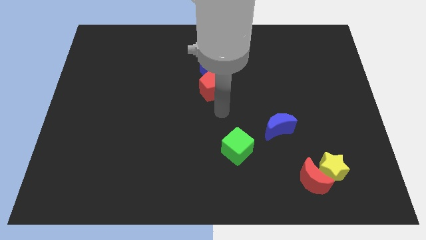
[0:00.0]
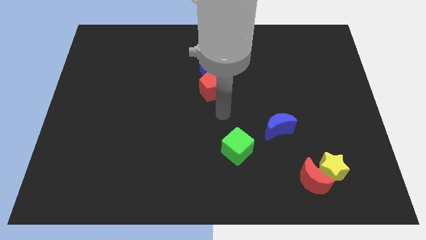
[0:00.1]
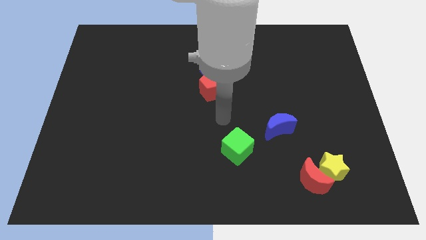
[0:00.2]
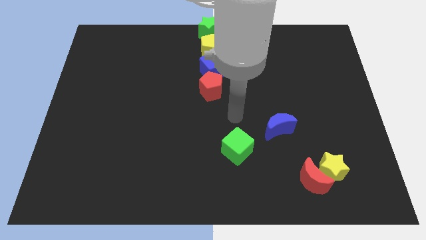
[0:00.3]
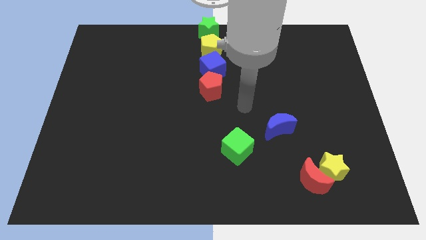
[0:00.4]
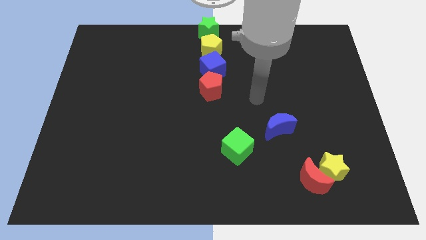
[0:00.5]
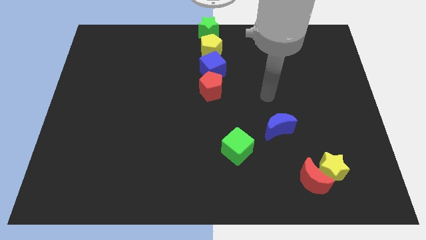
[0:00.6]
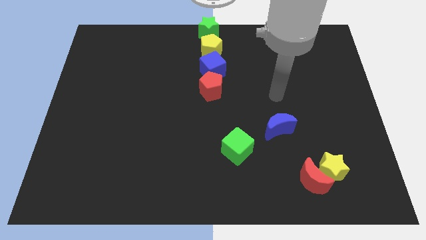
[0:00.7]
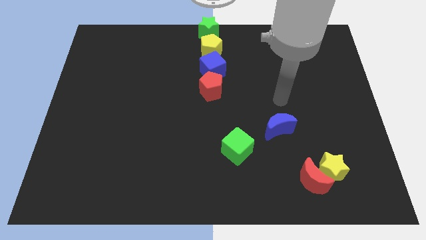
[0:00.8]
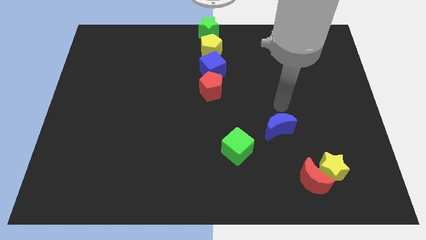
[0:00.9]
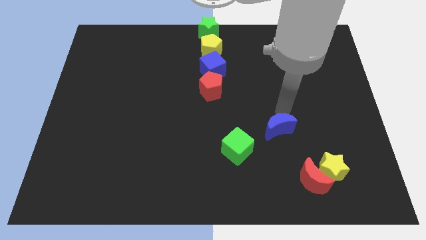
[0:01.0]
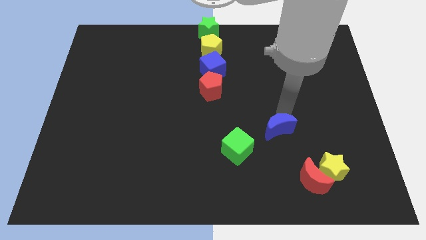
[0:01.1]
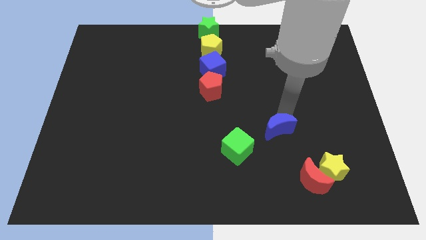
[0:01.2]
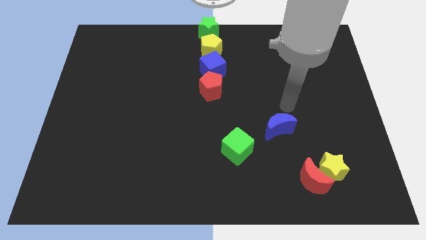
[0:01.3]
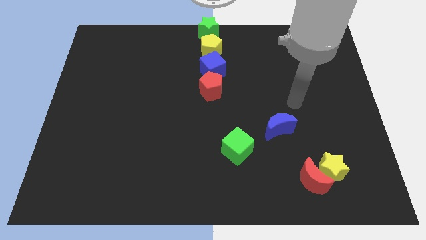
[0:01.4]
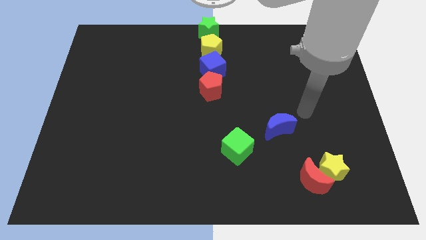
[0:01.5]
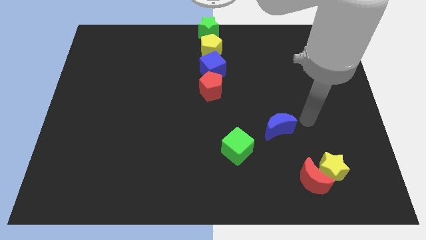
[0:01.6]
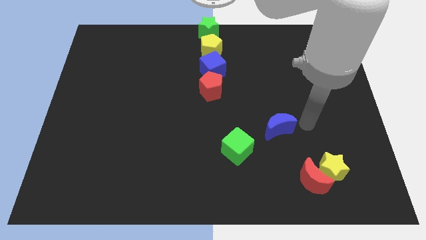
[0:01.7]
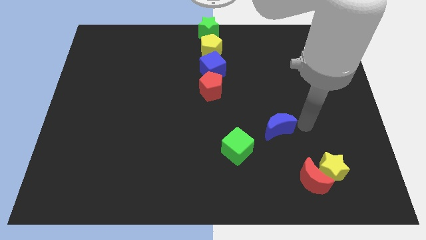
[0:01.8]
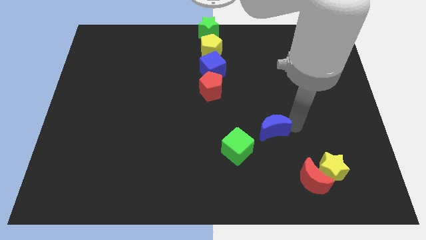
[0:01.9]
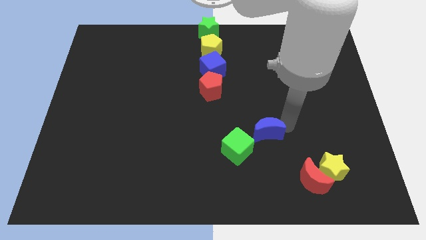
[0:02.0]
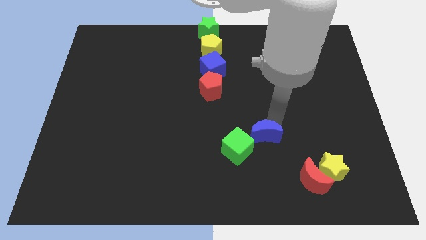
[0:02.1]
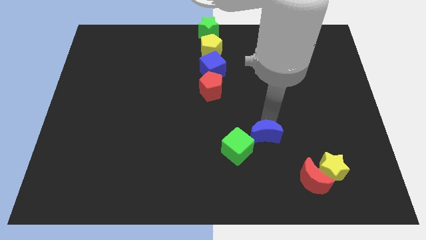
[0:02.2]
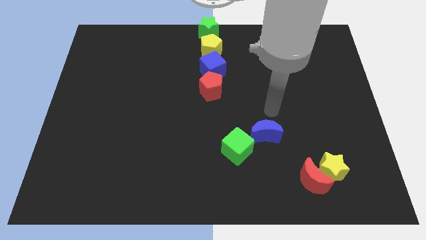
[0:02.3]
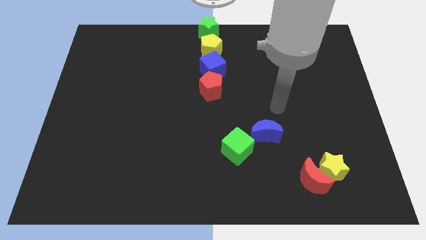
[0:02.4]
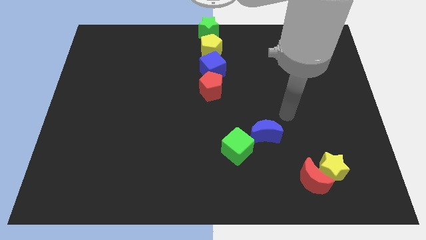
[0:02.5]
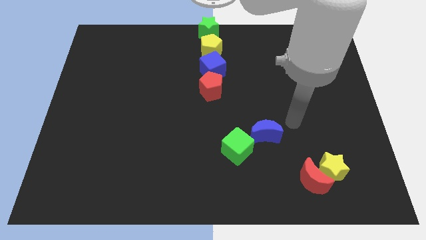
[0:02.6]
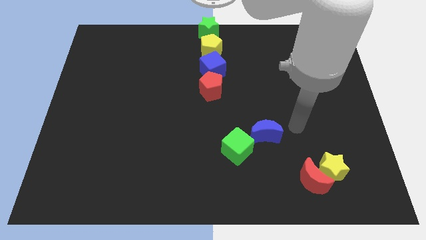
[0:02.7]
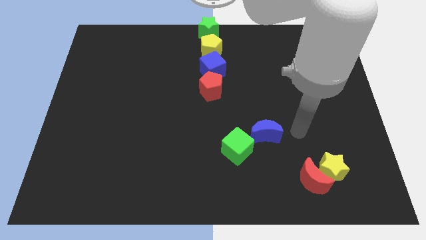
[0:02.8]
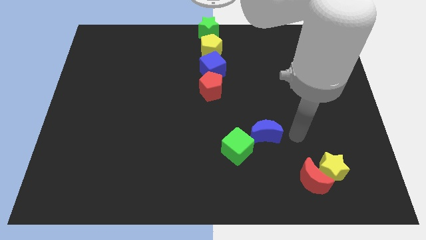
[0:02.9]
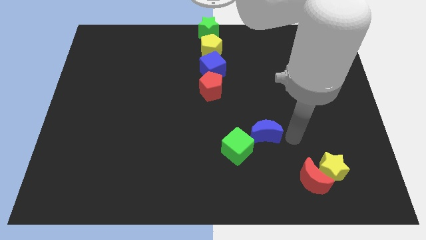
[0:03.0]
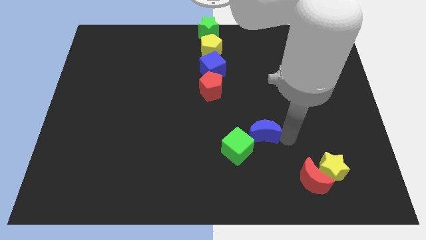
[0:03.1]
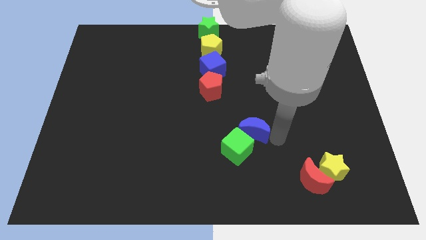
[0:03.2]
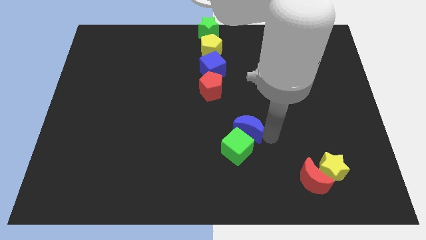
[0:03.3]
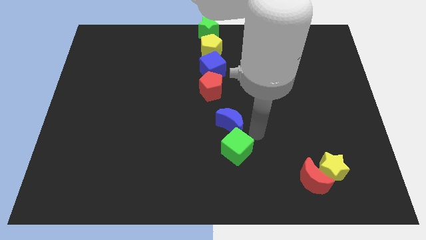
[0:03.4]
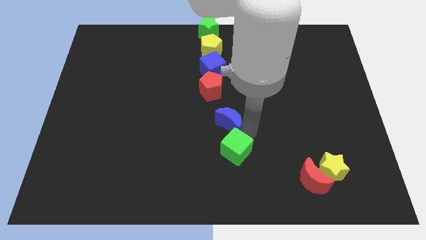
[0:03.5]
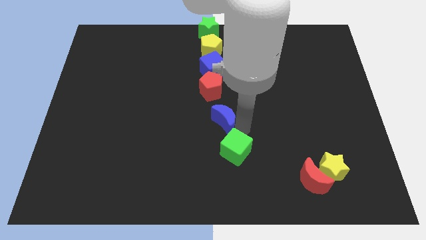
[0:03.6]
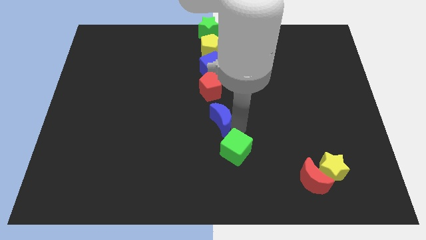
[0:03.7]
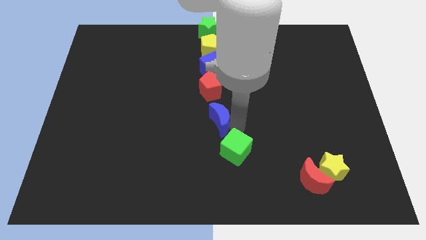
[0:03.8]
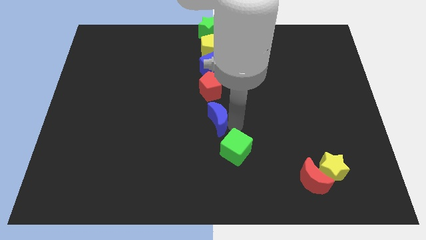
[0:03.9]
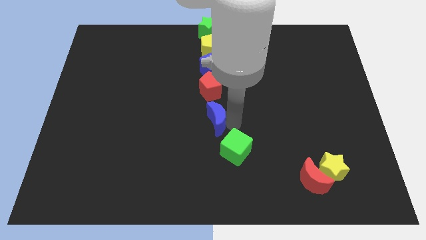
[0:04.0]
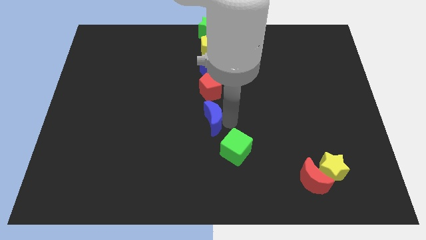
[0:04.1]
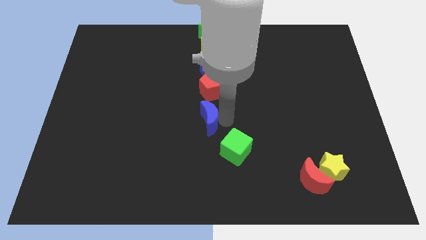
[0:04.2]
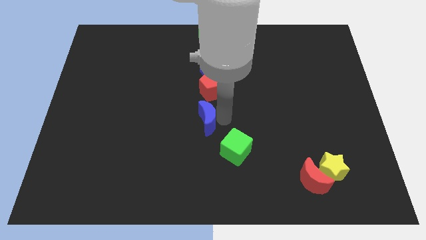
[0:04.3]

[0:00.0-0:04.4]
move the blue crescent to the bottom of the red pentagon

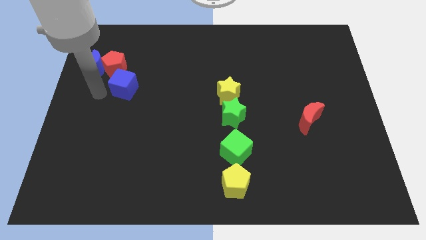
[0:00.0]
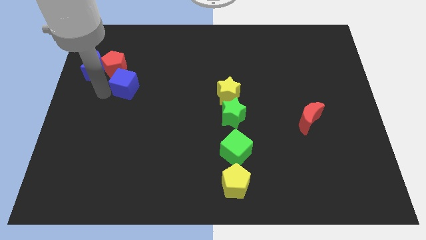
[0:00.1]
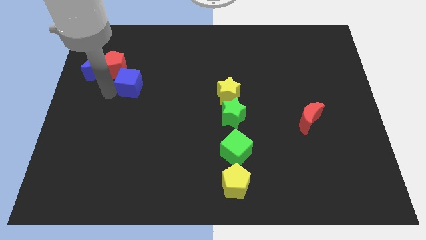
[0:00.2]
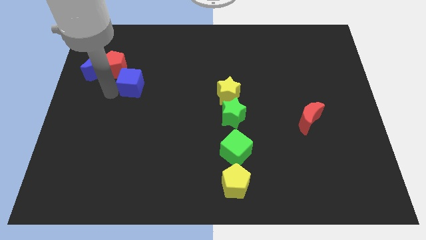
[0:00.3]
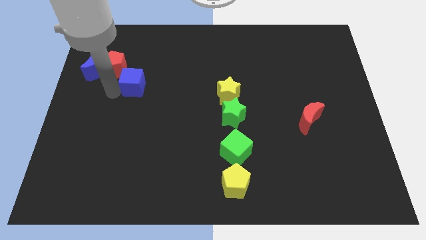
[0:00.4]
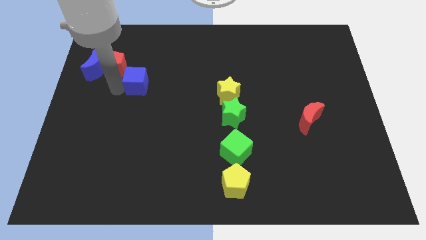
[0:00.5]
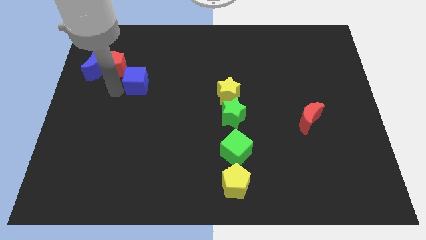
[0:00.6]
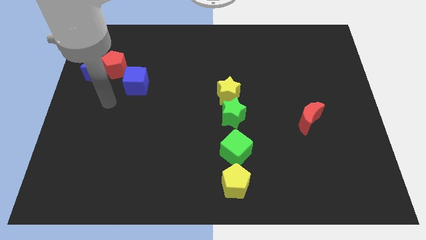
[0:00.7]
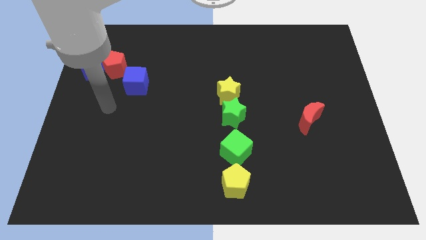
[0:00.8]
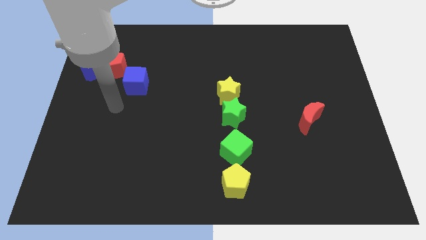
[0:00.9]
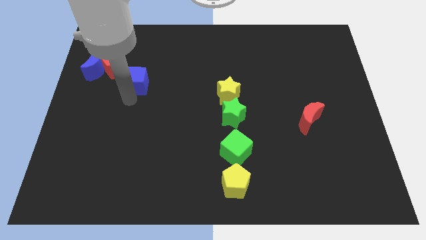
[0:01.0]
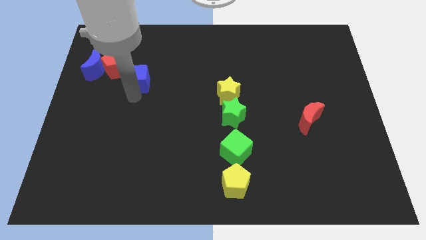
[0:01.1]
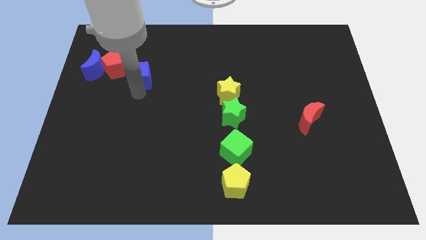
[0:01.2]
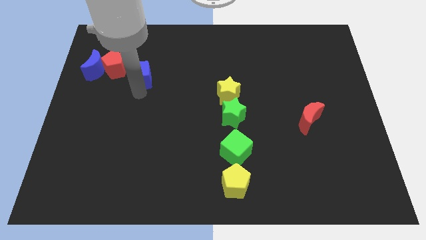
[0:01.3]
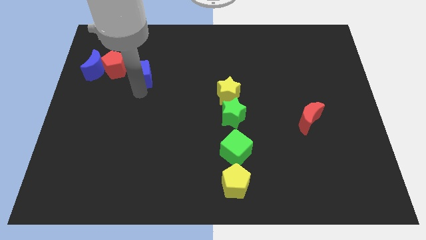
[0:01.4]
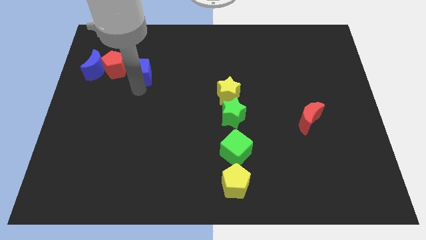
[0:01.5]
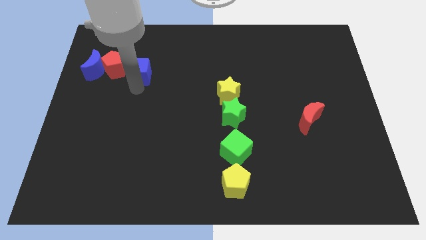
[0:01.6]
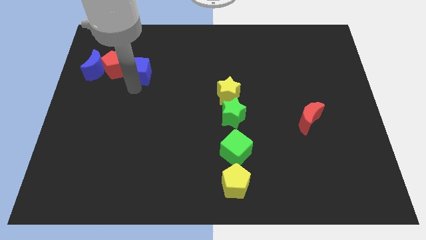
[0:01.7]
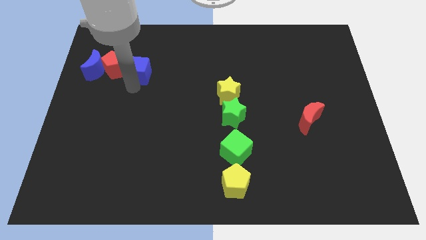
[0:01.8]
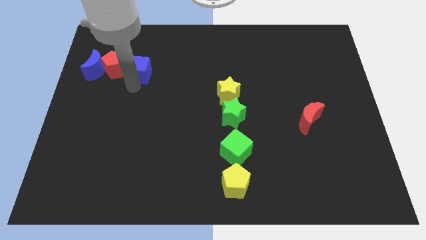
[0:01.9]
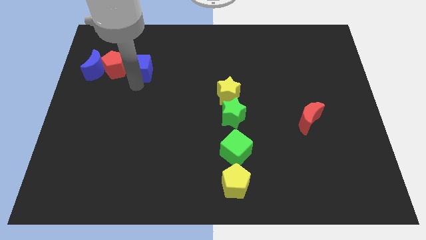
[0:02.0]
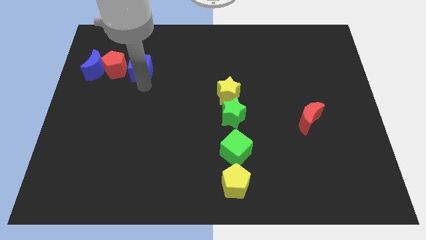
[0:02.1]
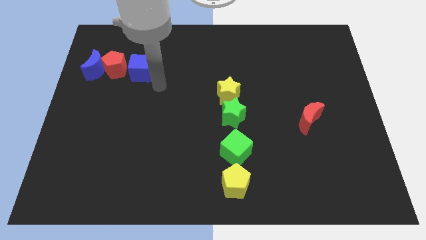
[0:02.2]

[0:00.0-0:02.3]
move the blue cube to right of the red pentagon

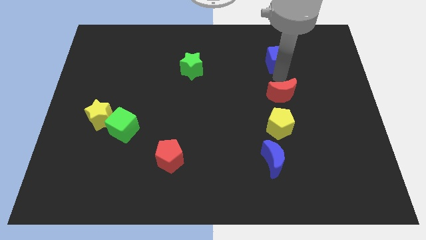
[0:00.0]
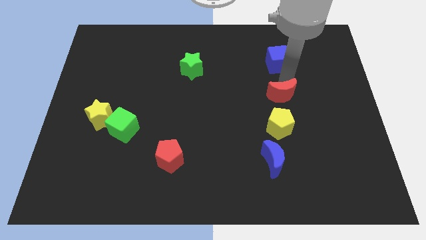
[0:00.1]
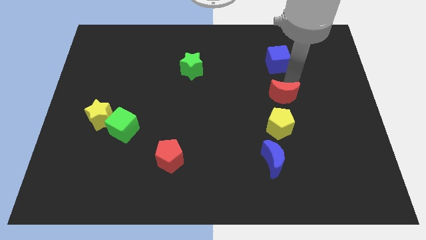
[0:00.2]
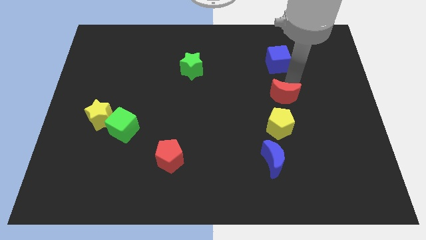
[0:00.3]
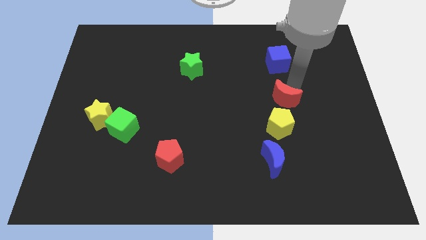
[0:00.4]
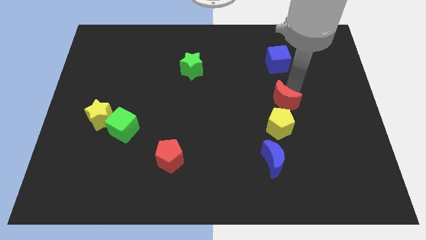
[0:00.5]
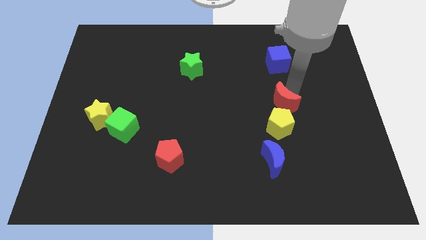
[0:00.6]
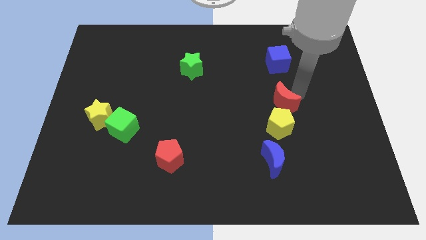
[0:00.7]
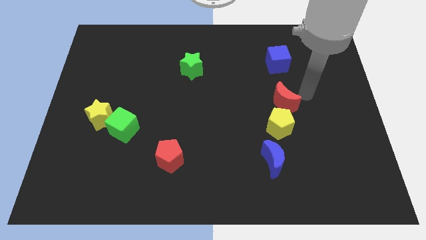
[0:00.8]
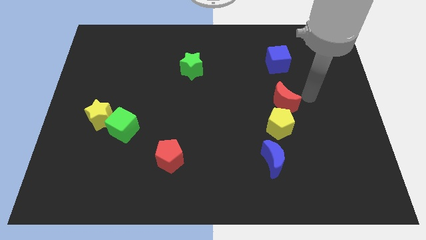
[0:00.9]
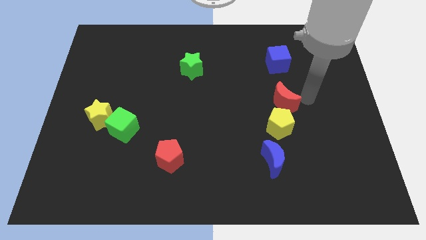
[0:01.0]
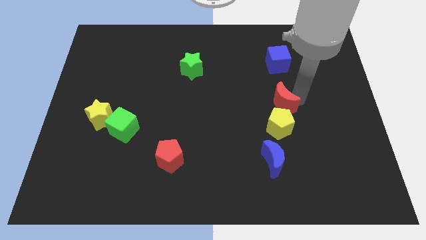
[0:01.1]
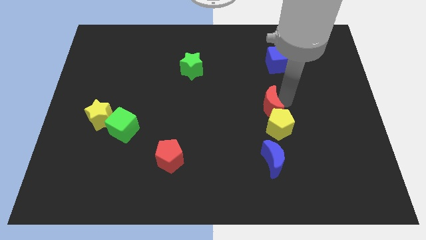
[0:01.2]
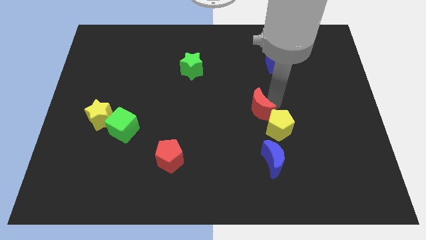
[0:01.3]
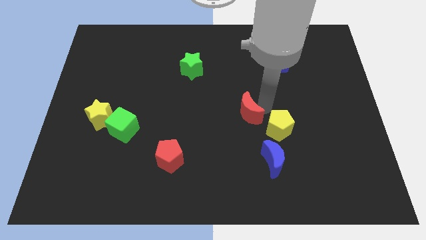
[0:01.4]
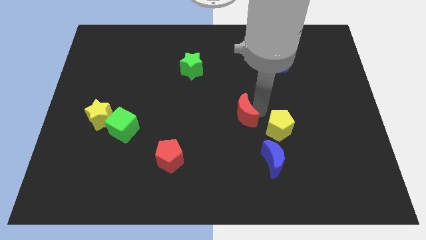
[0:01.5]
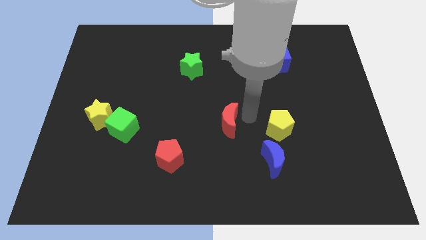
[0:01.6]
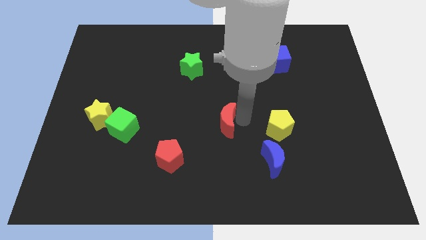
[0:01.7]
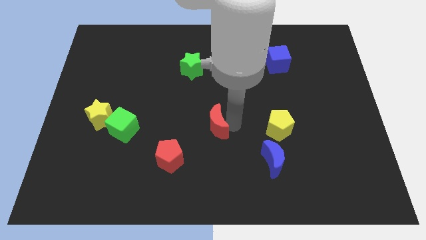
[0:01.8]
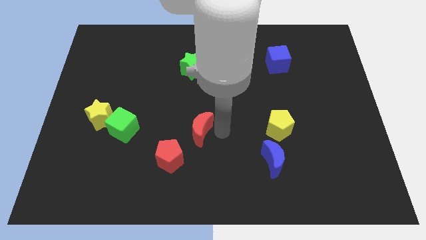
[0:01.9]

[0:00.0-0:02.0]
push the red moon to top of the red pentagon

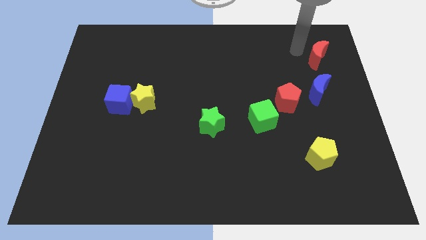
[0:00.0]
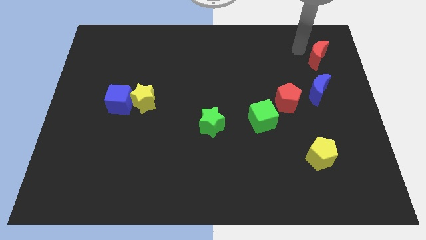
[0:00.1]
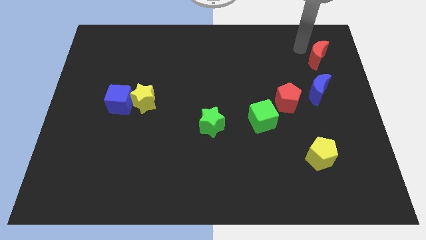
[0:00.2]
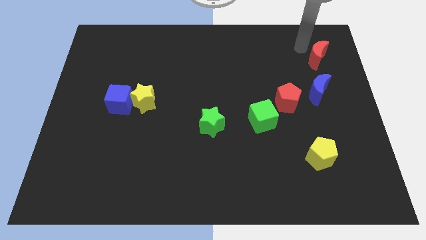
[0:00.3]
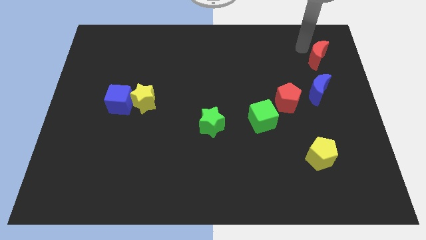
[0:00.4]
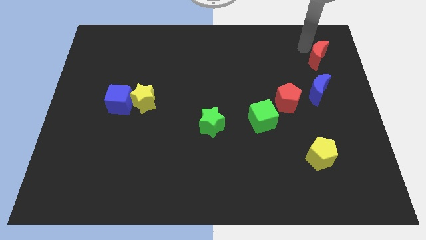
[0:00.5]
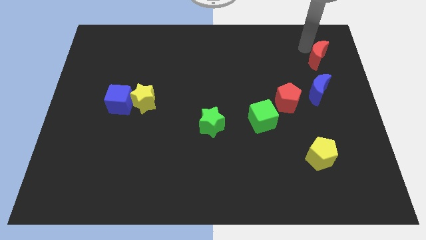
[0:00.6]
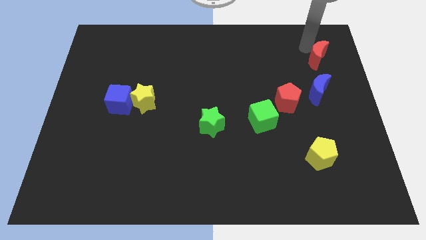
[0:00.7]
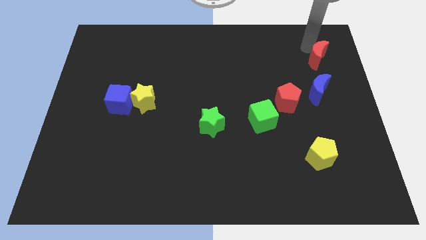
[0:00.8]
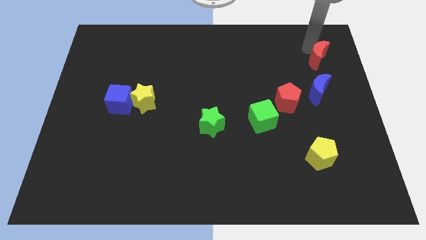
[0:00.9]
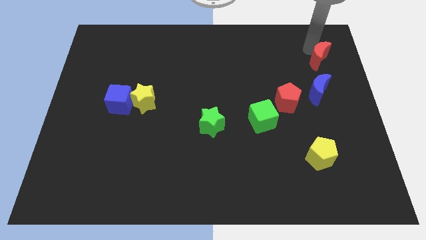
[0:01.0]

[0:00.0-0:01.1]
tap on the top side of red moon
